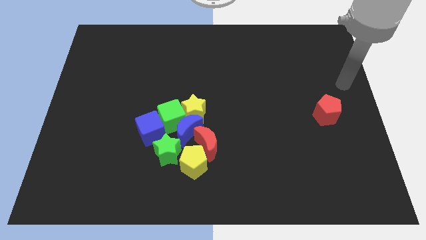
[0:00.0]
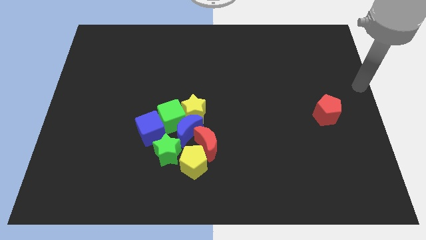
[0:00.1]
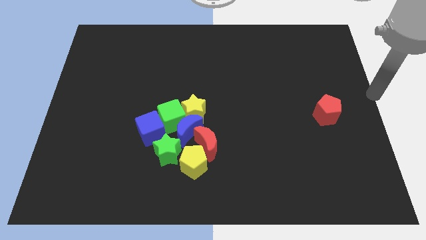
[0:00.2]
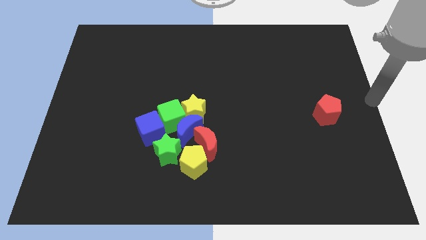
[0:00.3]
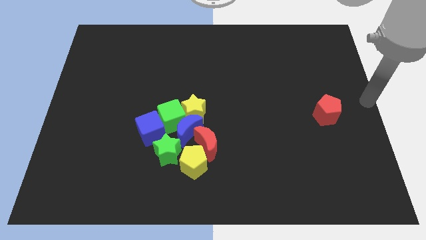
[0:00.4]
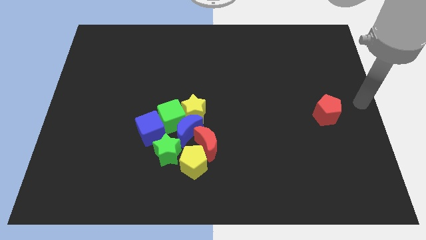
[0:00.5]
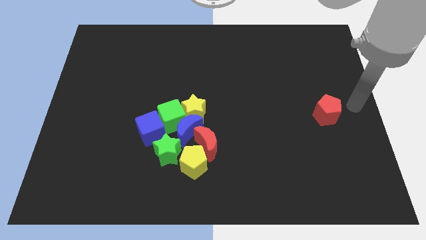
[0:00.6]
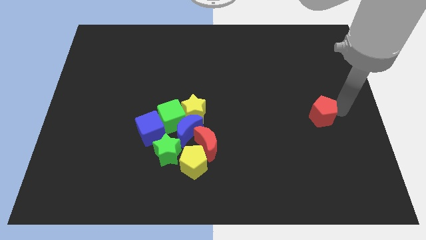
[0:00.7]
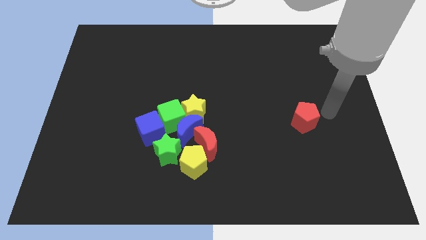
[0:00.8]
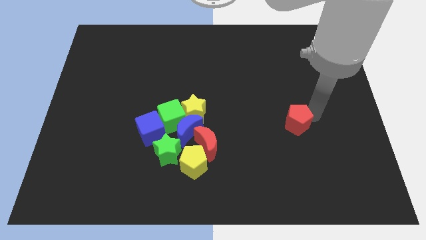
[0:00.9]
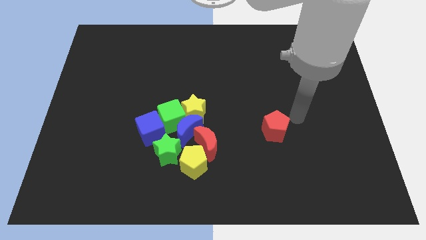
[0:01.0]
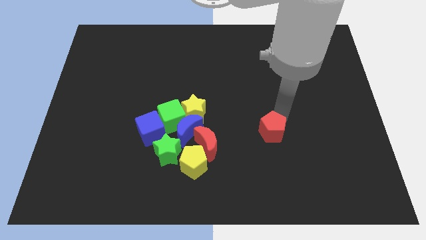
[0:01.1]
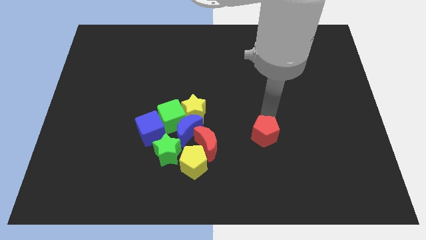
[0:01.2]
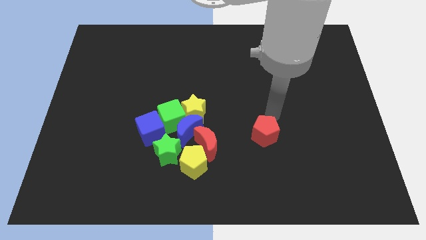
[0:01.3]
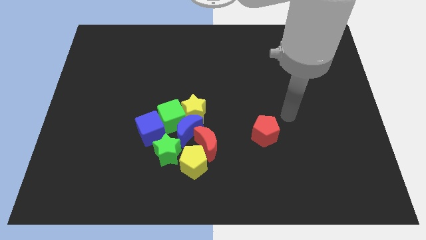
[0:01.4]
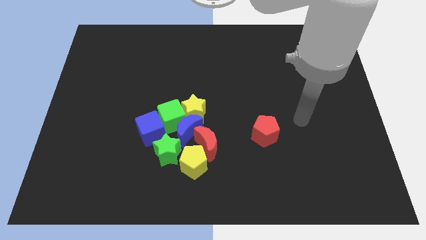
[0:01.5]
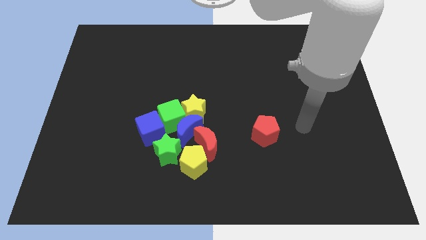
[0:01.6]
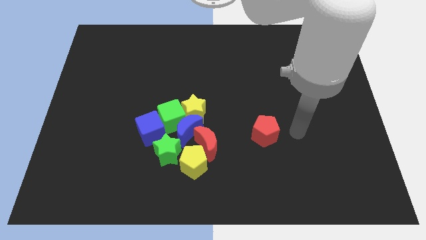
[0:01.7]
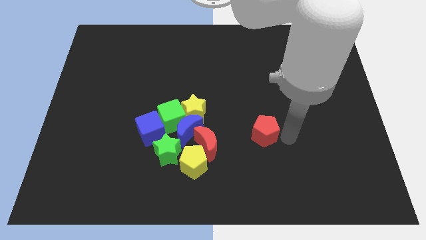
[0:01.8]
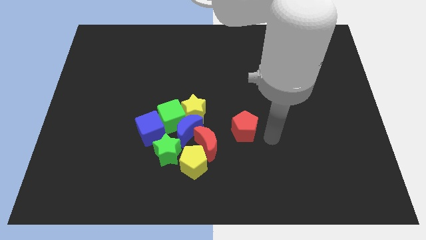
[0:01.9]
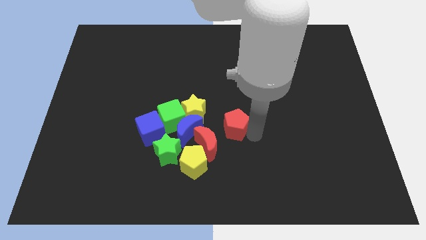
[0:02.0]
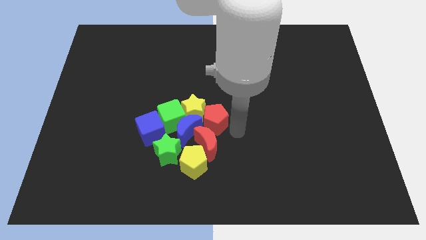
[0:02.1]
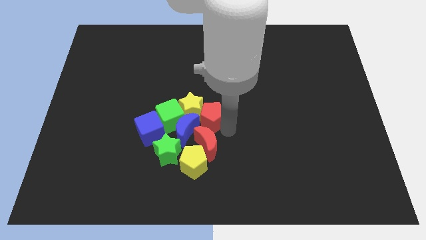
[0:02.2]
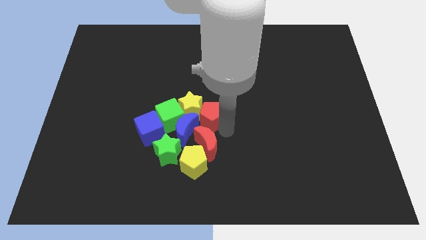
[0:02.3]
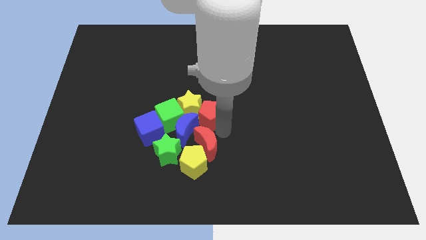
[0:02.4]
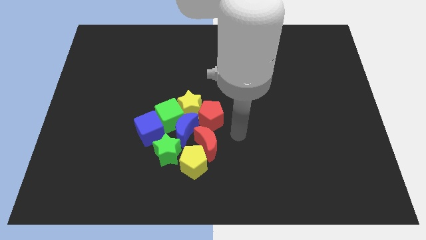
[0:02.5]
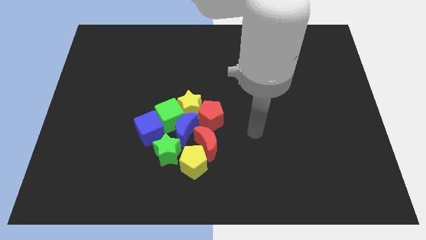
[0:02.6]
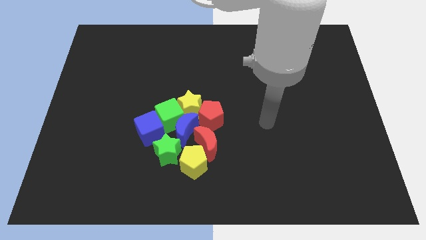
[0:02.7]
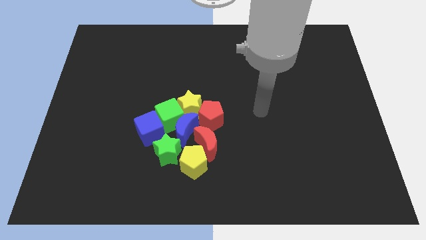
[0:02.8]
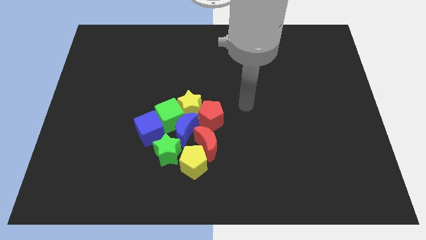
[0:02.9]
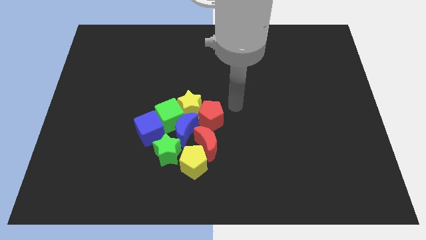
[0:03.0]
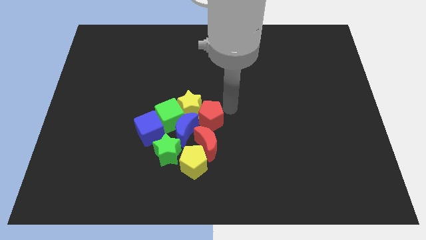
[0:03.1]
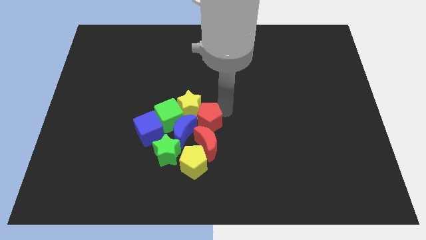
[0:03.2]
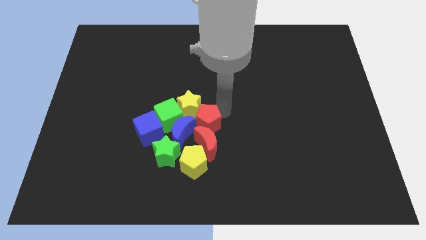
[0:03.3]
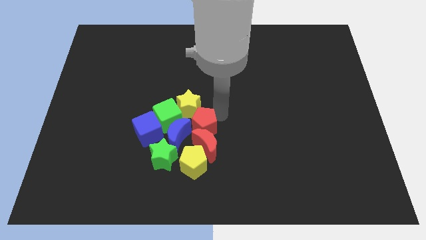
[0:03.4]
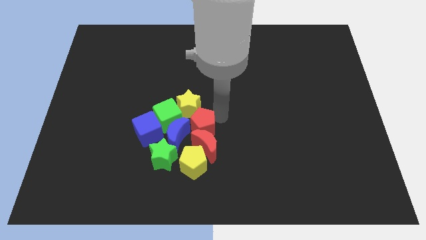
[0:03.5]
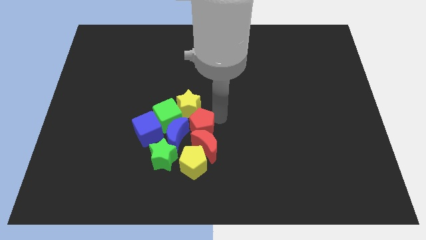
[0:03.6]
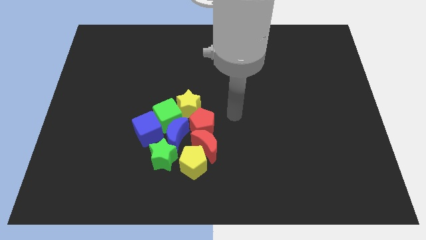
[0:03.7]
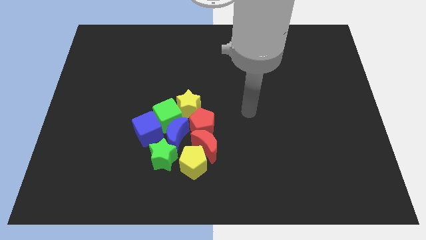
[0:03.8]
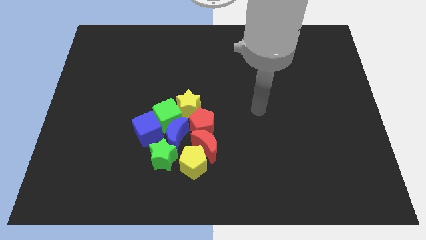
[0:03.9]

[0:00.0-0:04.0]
move red pentagon into the group of blocks

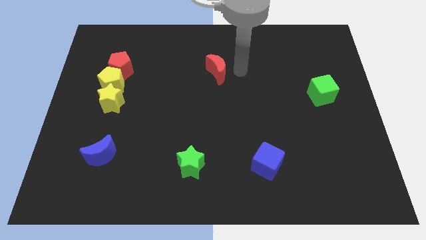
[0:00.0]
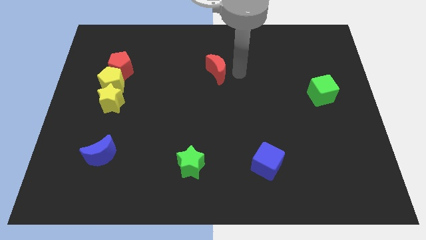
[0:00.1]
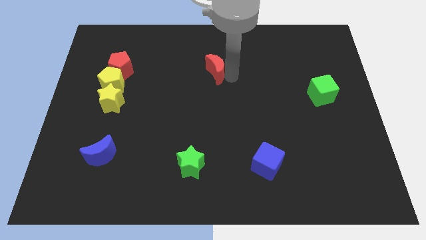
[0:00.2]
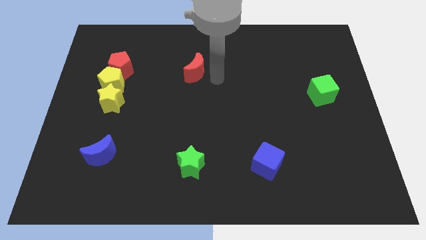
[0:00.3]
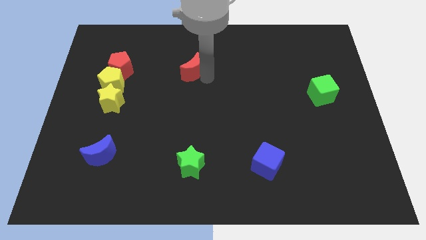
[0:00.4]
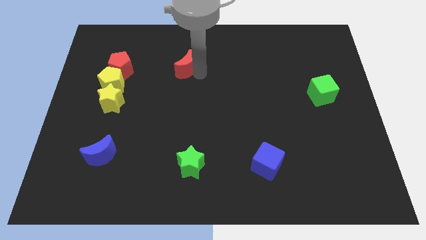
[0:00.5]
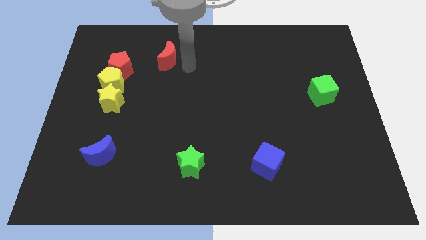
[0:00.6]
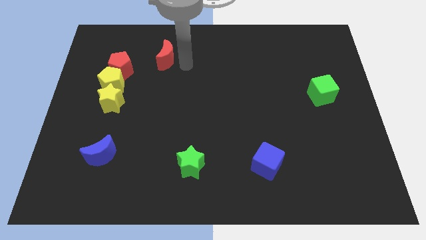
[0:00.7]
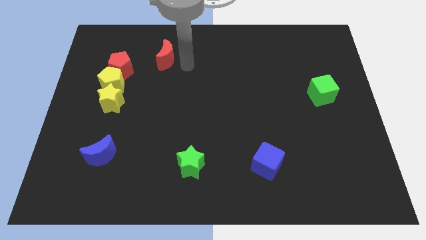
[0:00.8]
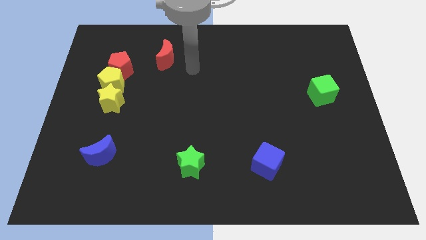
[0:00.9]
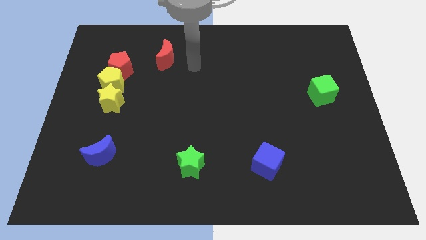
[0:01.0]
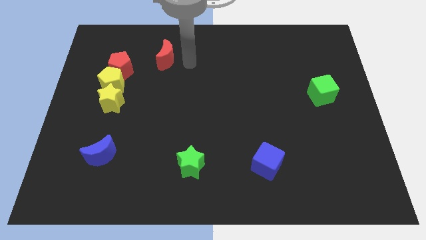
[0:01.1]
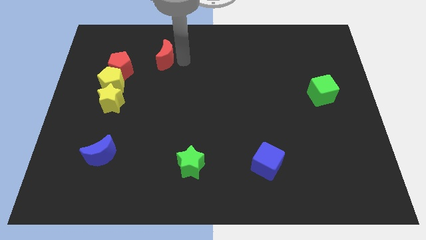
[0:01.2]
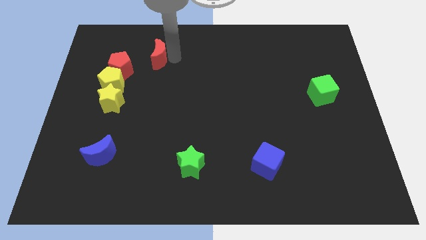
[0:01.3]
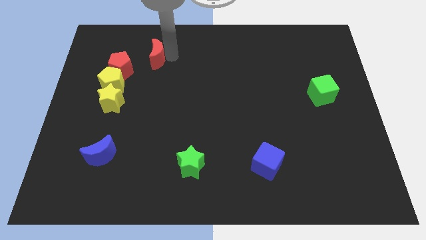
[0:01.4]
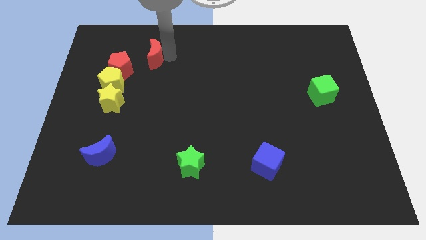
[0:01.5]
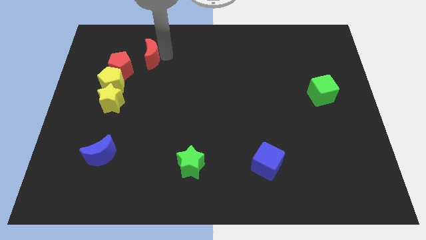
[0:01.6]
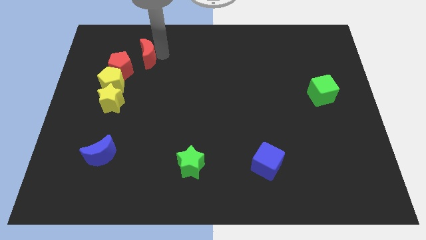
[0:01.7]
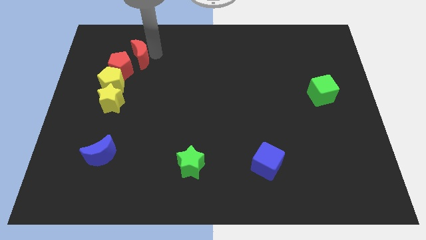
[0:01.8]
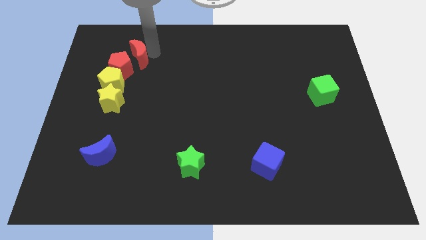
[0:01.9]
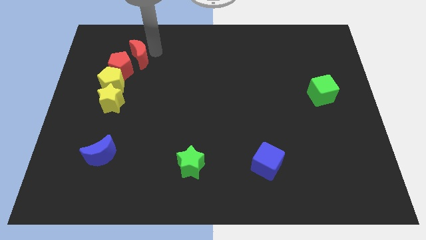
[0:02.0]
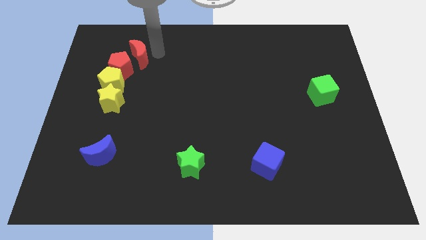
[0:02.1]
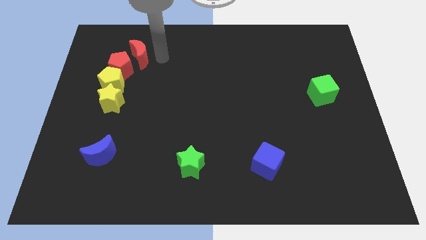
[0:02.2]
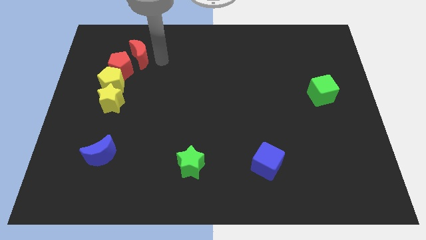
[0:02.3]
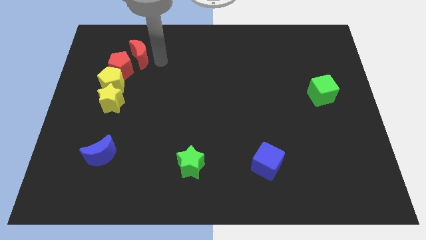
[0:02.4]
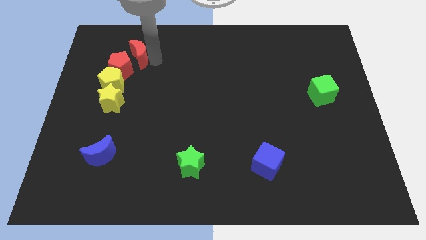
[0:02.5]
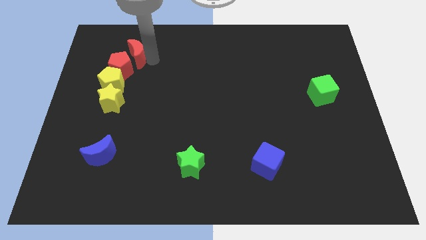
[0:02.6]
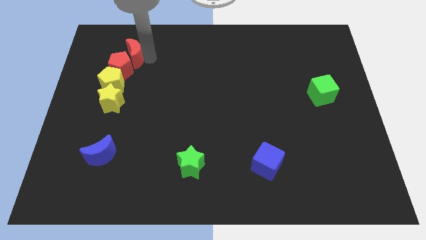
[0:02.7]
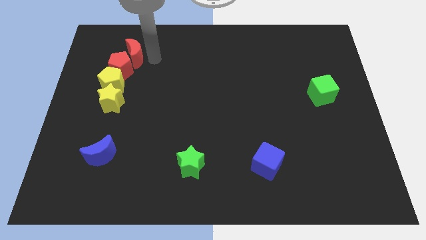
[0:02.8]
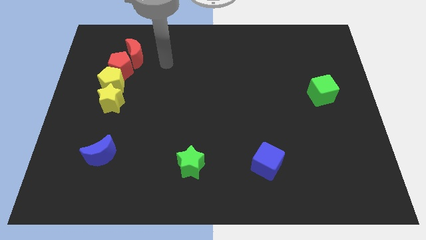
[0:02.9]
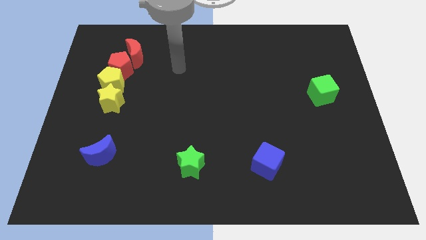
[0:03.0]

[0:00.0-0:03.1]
push the red moon into the red pentagon

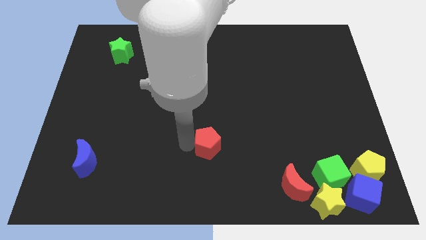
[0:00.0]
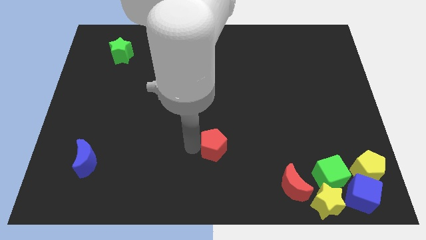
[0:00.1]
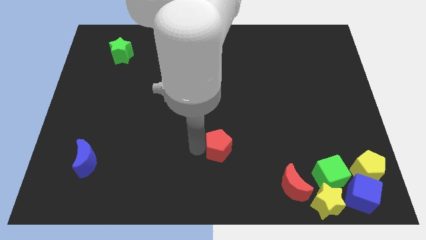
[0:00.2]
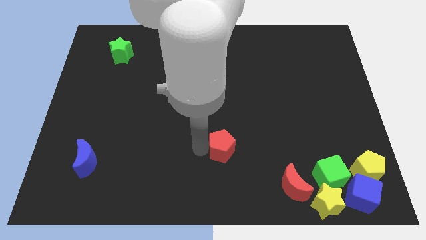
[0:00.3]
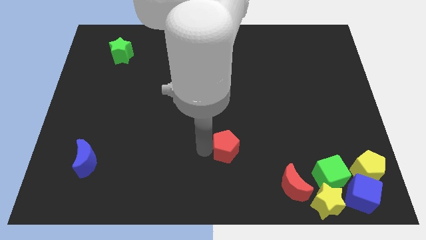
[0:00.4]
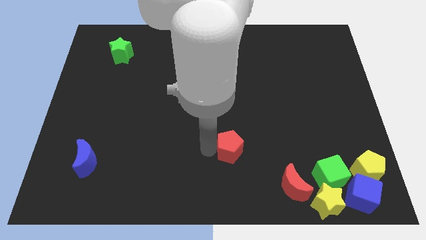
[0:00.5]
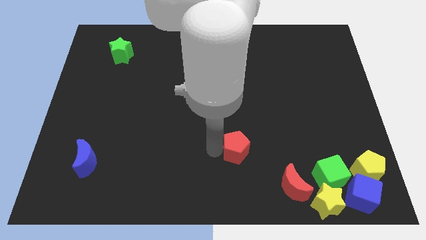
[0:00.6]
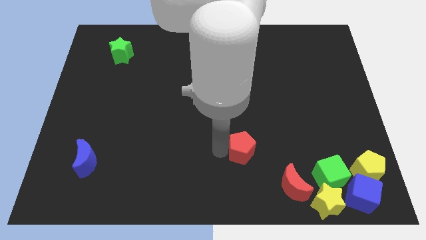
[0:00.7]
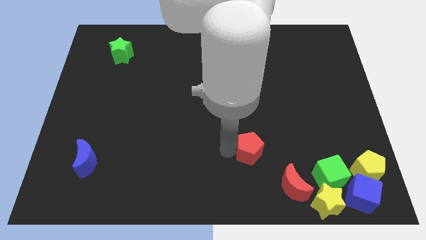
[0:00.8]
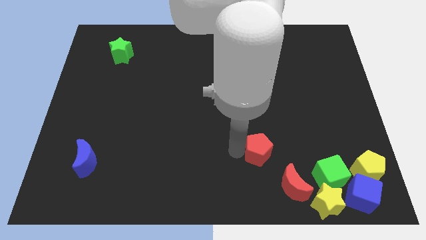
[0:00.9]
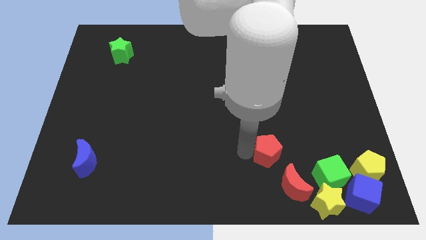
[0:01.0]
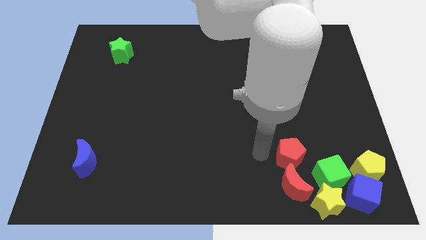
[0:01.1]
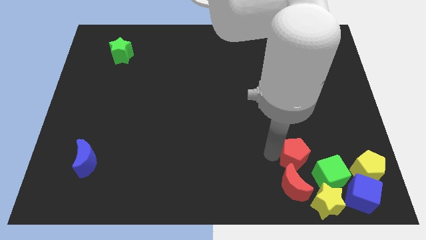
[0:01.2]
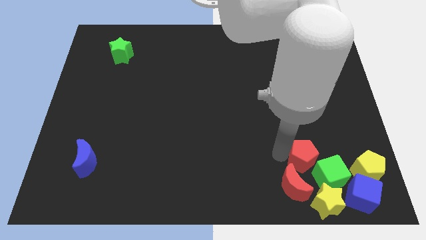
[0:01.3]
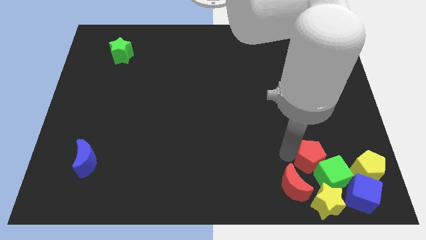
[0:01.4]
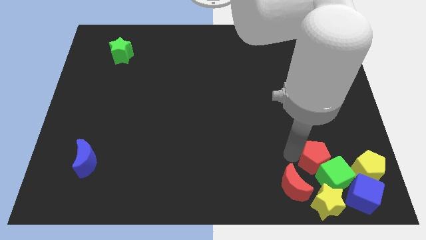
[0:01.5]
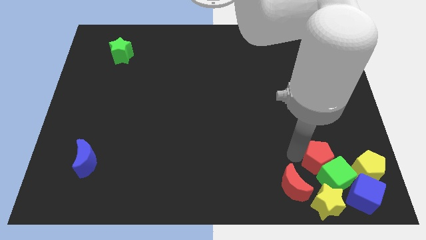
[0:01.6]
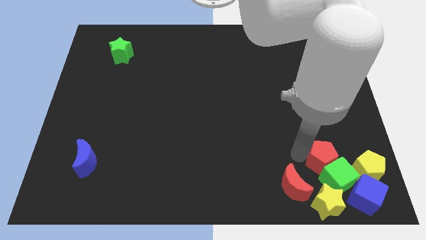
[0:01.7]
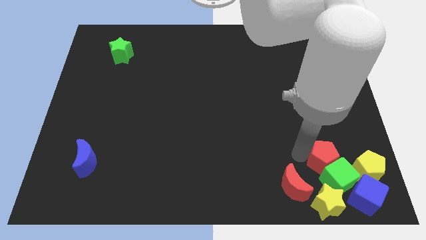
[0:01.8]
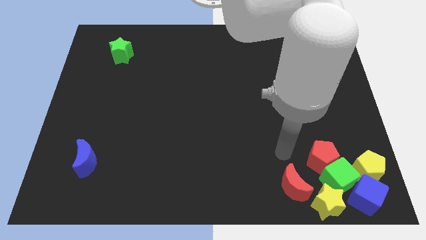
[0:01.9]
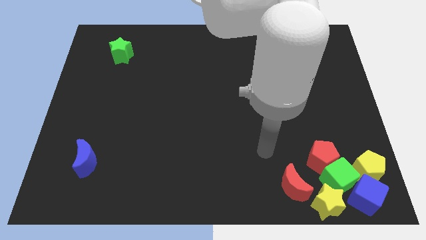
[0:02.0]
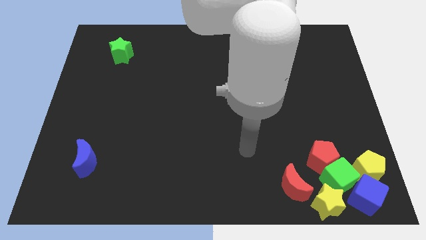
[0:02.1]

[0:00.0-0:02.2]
move red pentagon into green cube
